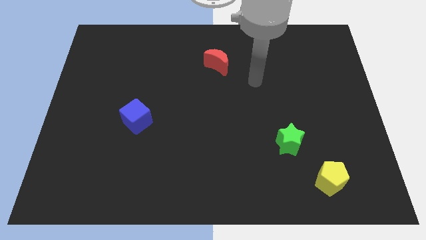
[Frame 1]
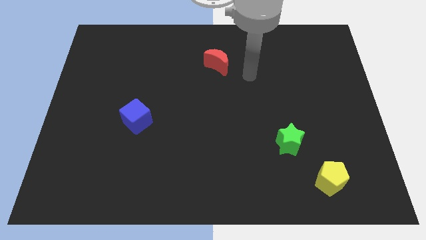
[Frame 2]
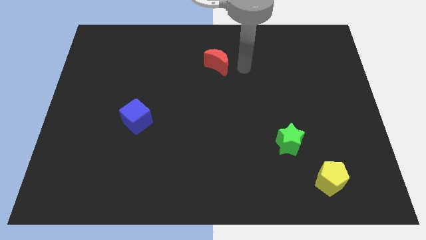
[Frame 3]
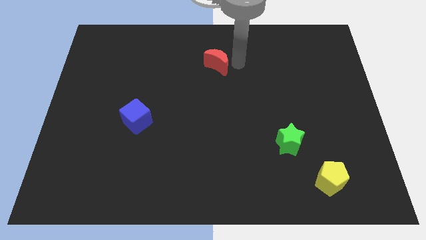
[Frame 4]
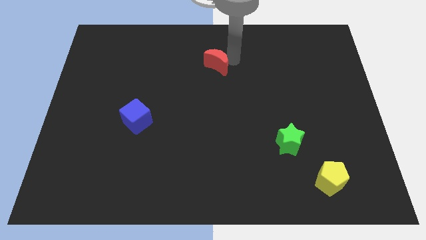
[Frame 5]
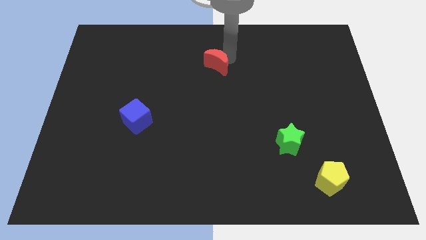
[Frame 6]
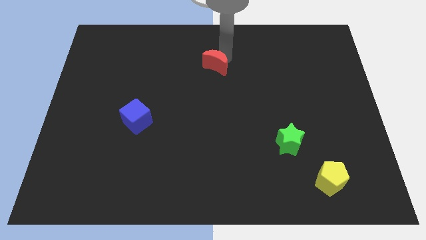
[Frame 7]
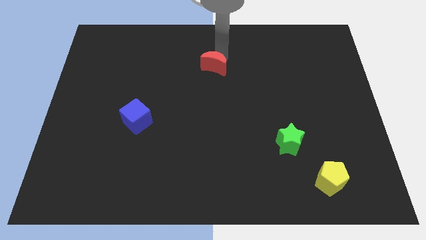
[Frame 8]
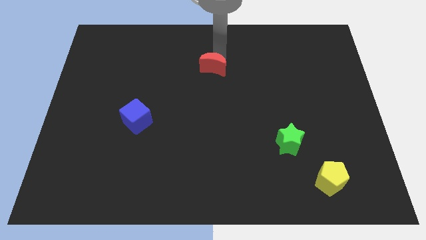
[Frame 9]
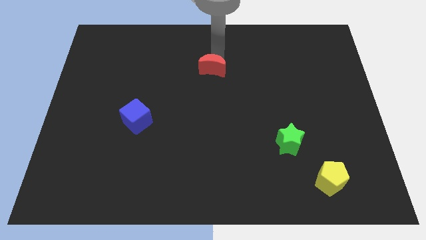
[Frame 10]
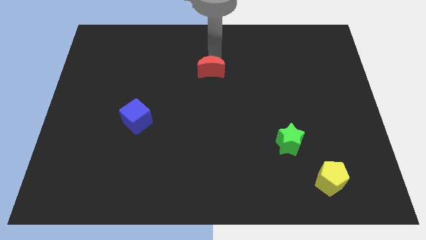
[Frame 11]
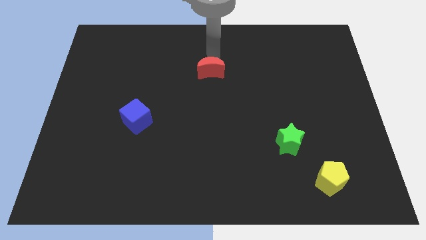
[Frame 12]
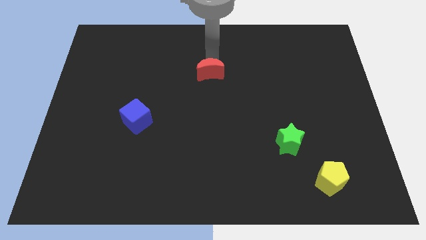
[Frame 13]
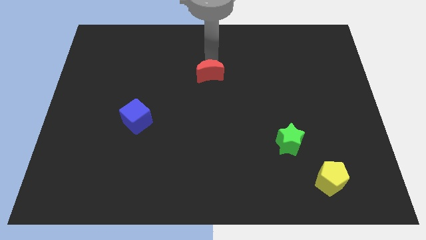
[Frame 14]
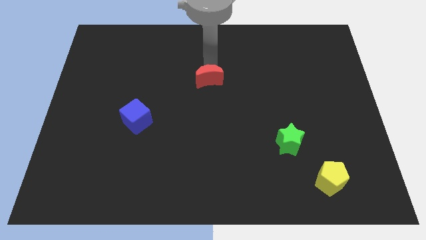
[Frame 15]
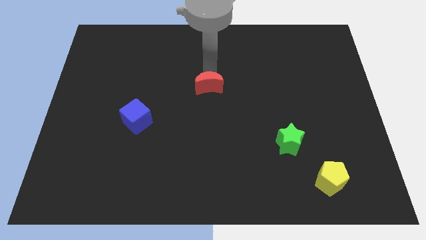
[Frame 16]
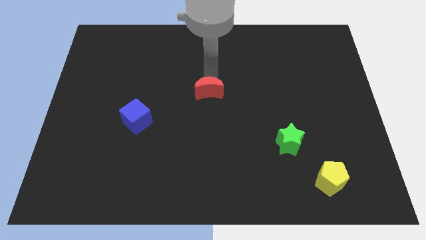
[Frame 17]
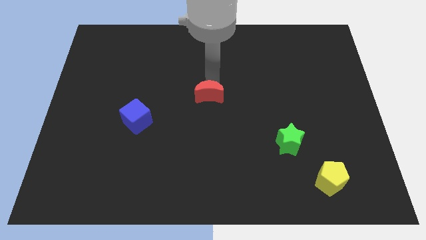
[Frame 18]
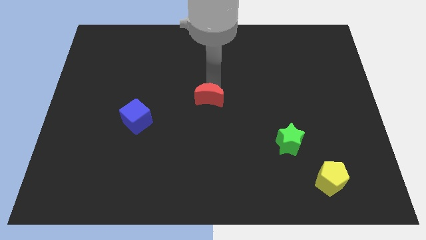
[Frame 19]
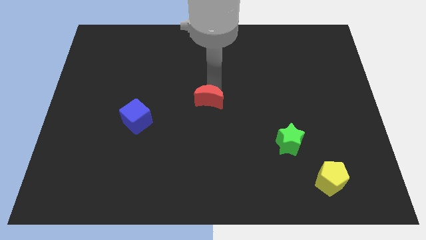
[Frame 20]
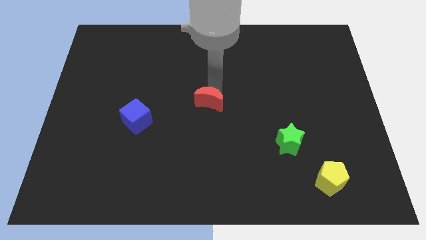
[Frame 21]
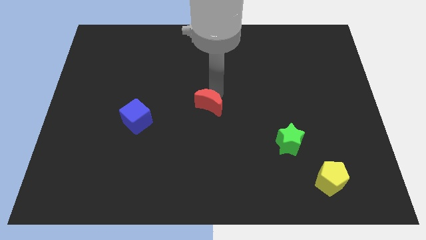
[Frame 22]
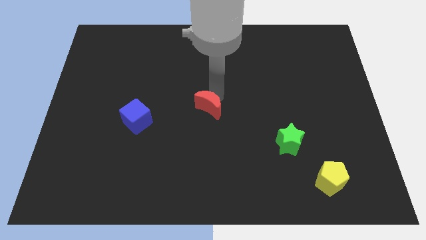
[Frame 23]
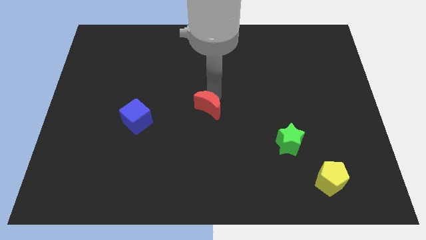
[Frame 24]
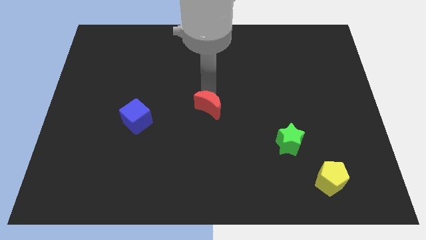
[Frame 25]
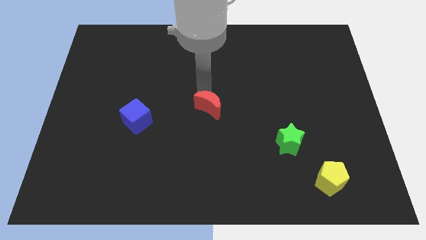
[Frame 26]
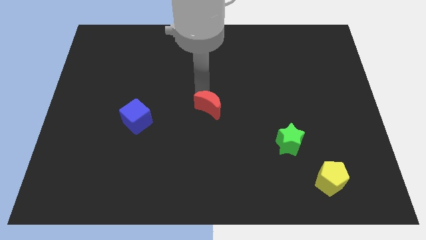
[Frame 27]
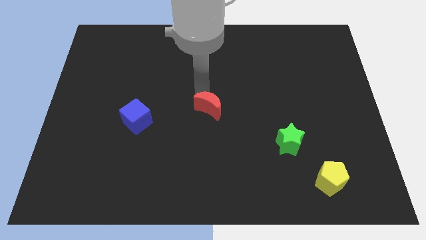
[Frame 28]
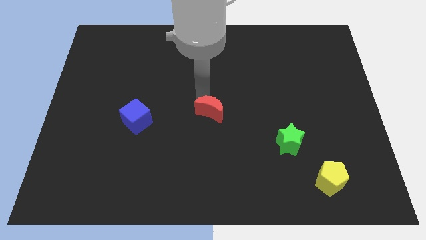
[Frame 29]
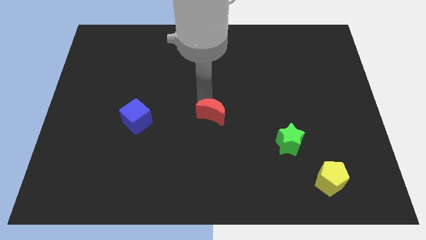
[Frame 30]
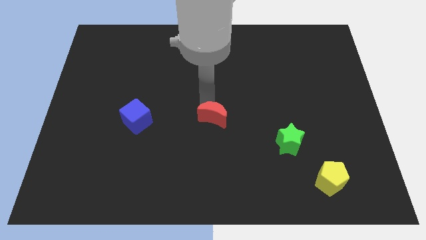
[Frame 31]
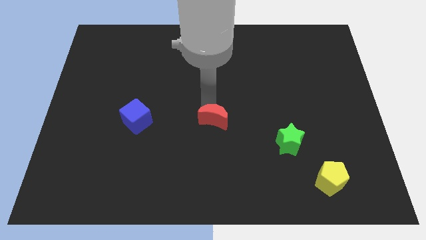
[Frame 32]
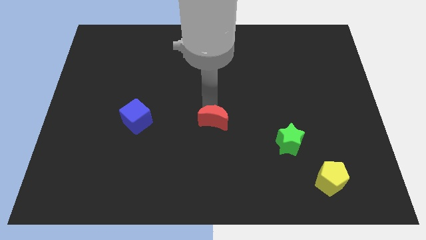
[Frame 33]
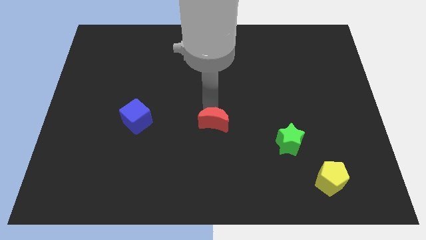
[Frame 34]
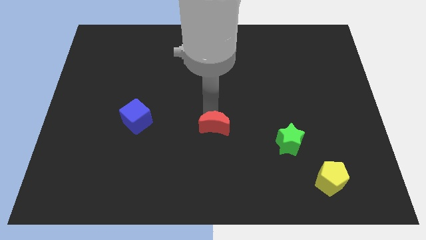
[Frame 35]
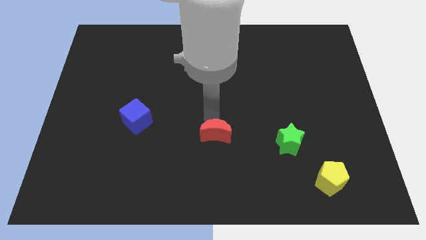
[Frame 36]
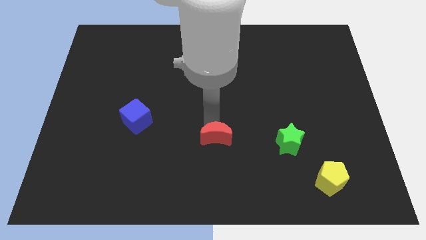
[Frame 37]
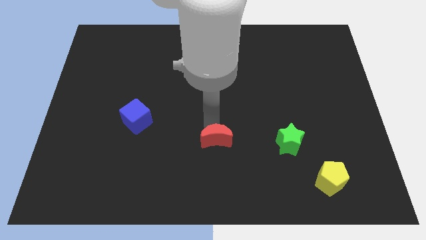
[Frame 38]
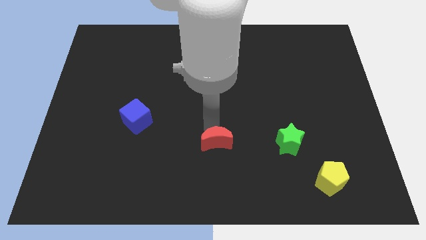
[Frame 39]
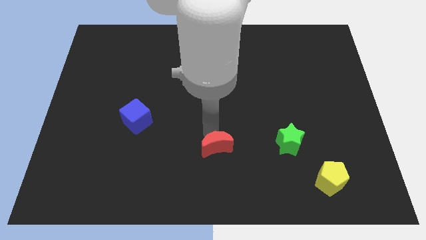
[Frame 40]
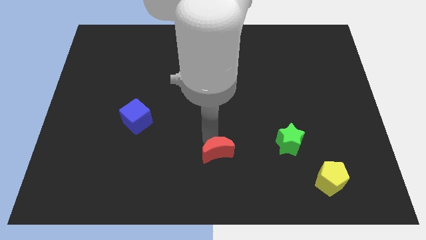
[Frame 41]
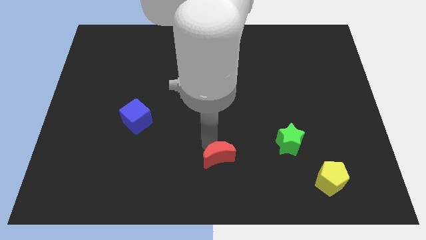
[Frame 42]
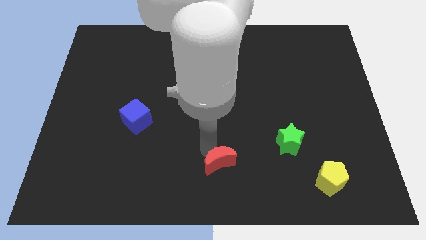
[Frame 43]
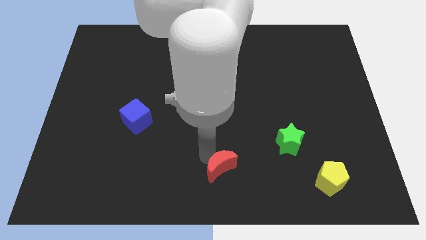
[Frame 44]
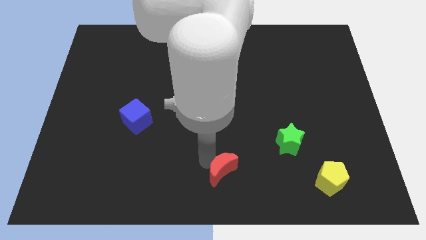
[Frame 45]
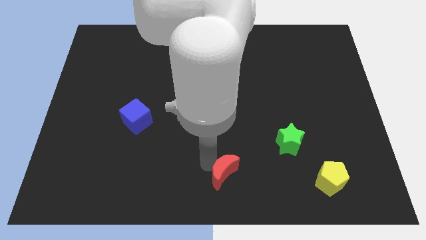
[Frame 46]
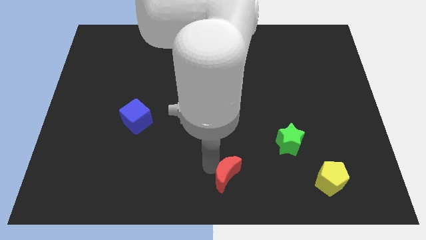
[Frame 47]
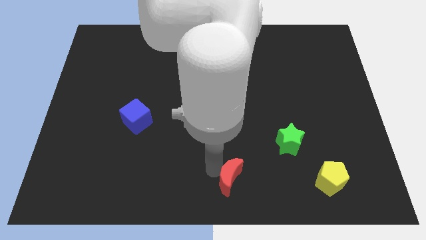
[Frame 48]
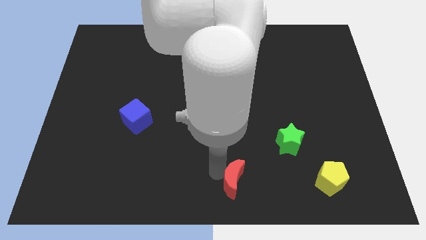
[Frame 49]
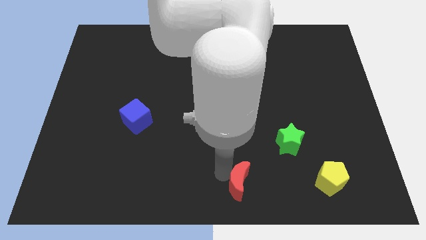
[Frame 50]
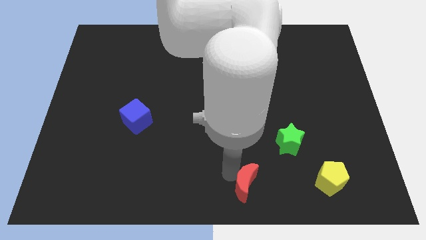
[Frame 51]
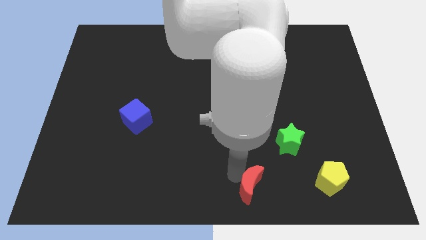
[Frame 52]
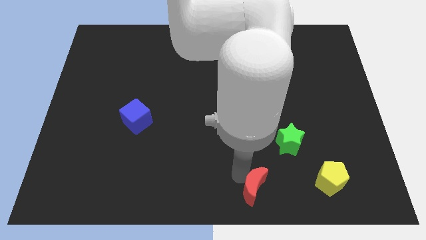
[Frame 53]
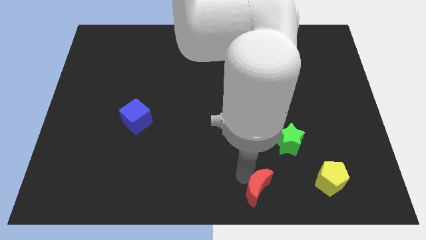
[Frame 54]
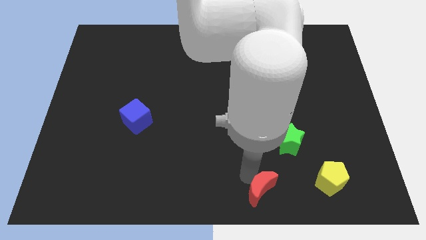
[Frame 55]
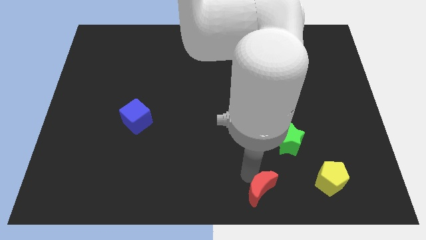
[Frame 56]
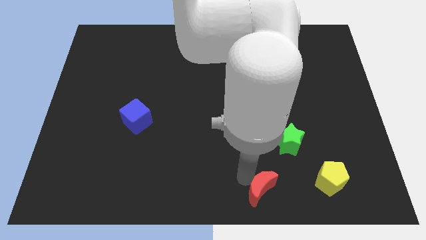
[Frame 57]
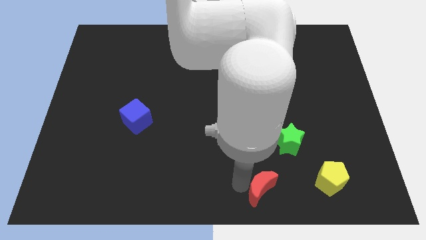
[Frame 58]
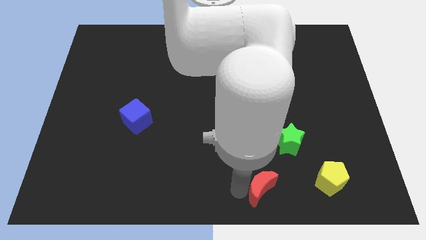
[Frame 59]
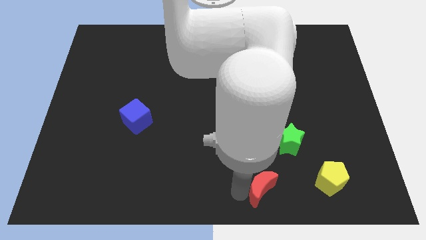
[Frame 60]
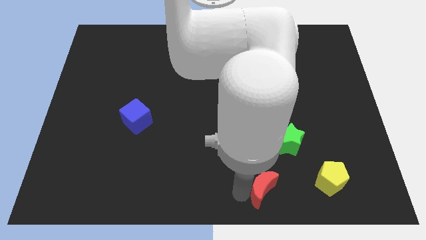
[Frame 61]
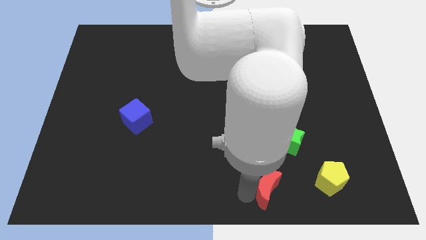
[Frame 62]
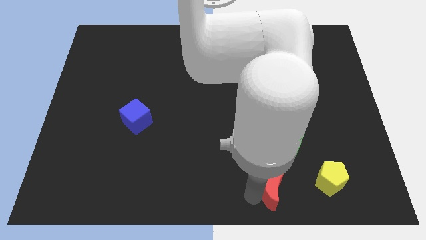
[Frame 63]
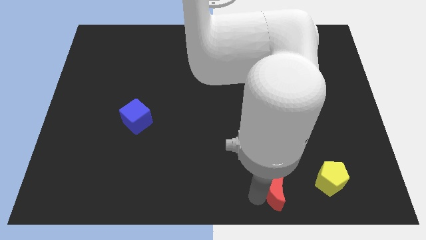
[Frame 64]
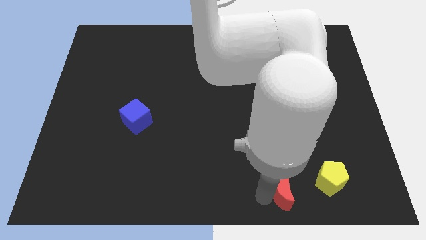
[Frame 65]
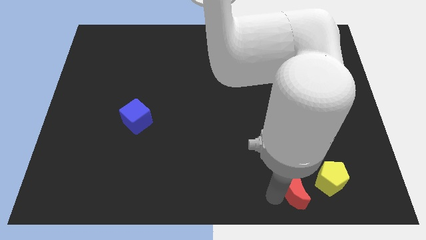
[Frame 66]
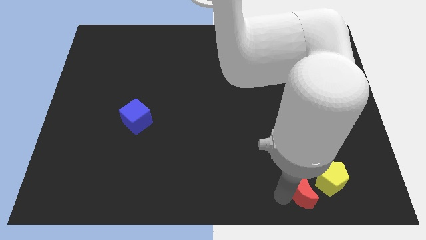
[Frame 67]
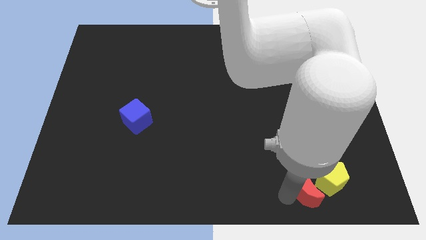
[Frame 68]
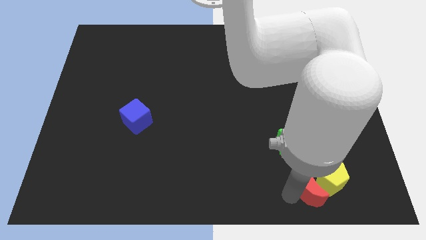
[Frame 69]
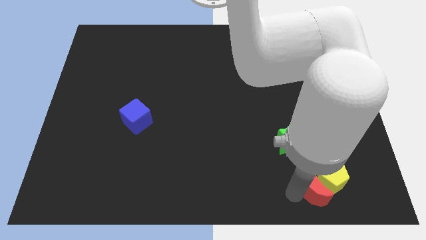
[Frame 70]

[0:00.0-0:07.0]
put the red block next to the yellow pentagon

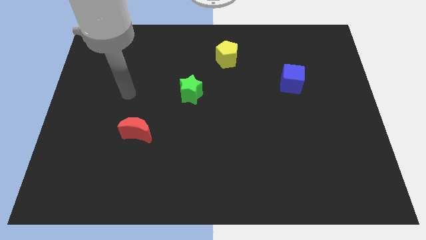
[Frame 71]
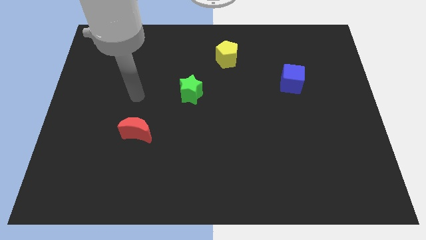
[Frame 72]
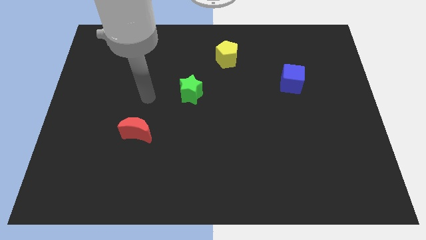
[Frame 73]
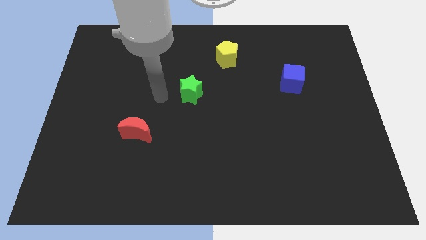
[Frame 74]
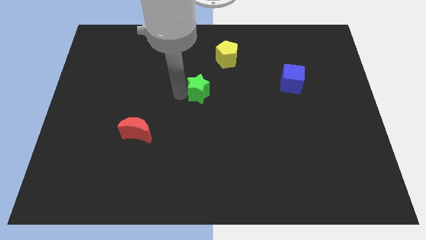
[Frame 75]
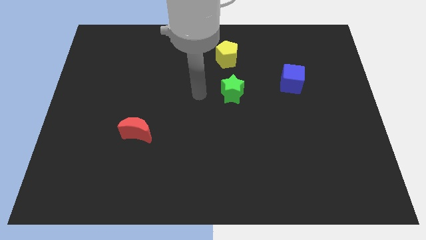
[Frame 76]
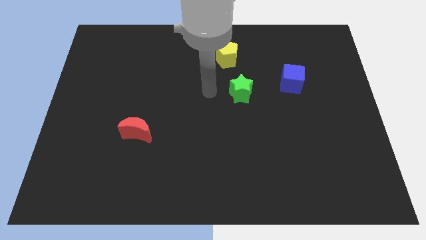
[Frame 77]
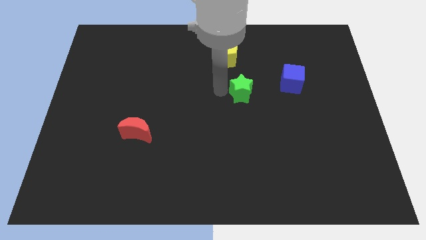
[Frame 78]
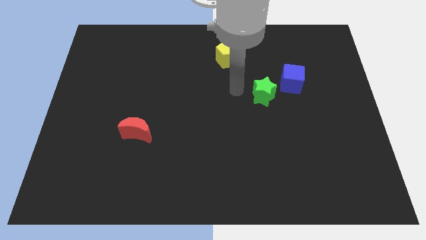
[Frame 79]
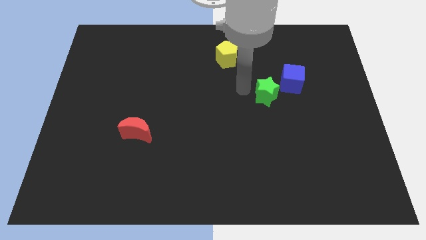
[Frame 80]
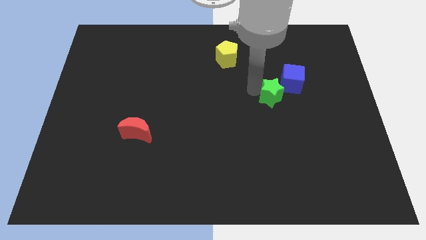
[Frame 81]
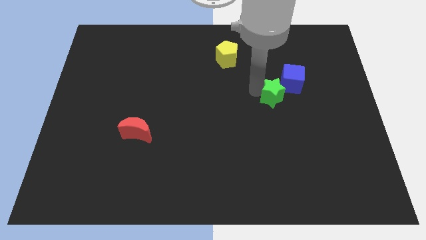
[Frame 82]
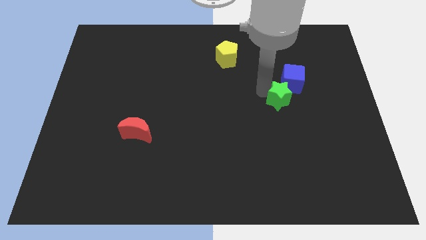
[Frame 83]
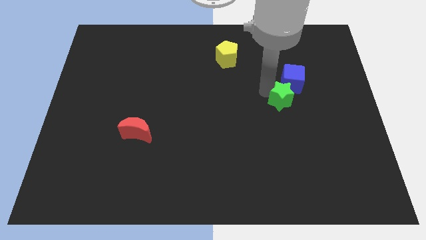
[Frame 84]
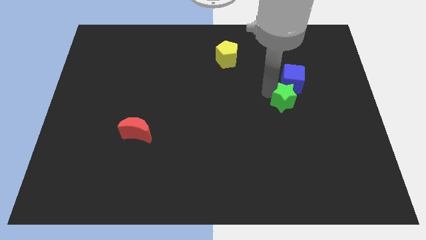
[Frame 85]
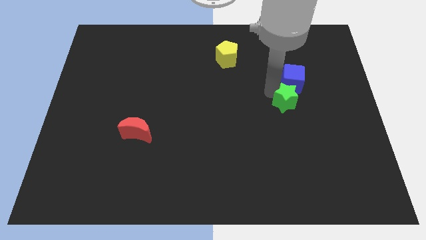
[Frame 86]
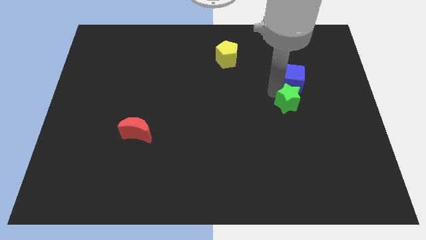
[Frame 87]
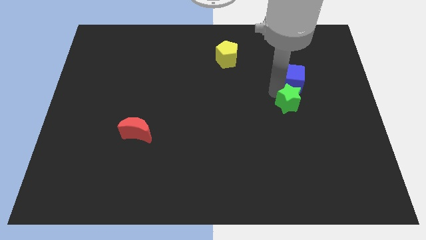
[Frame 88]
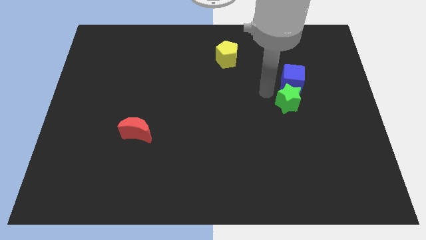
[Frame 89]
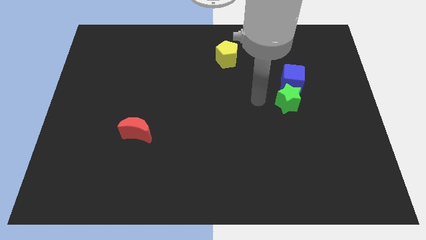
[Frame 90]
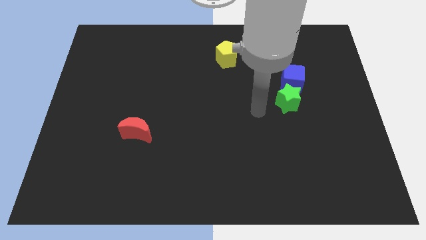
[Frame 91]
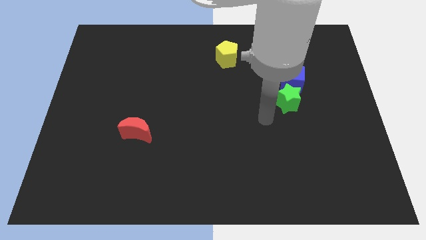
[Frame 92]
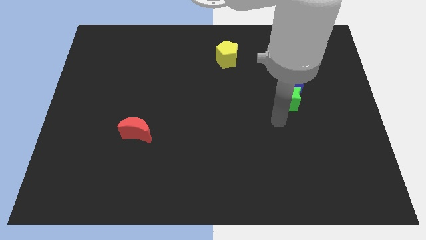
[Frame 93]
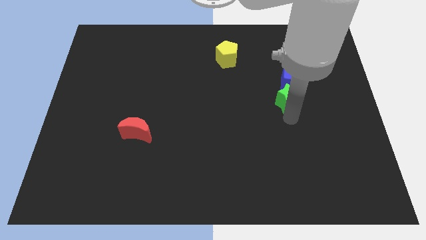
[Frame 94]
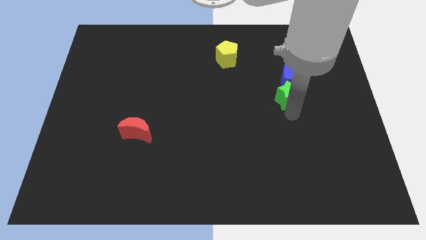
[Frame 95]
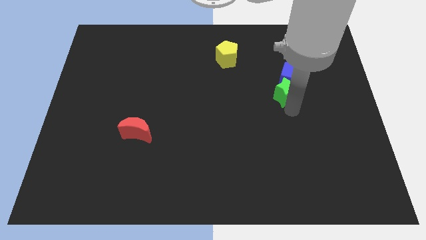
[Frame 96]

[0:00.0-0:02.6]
push the green star next to the blue block
